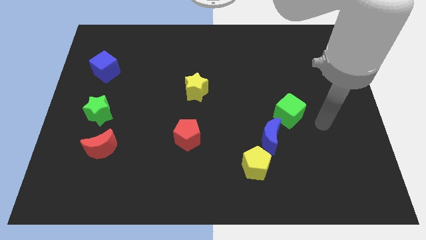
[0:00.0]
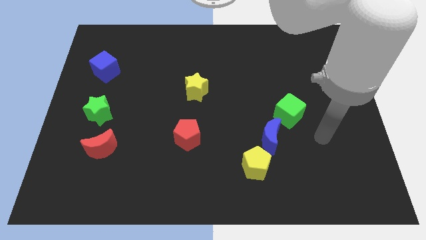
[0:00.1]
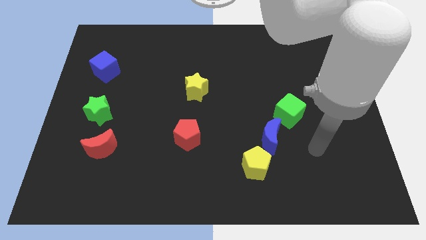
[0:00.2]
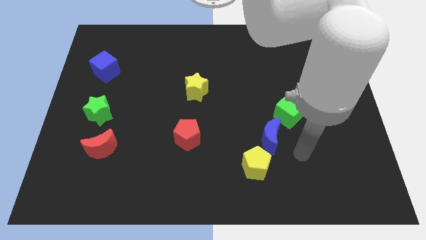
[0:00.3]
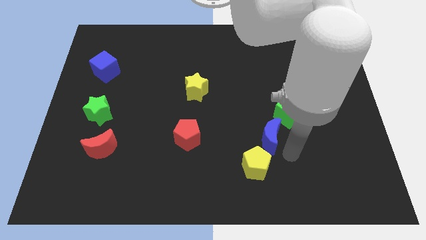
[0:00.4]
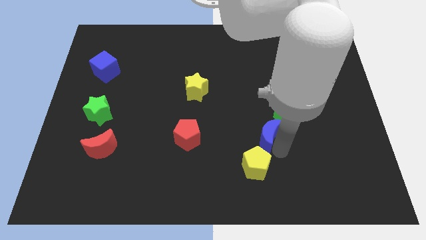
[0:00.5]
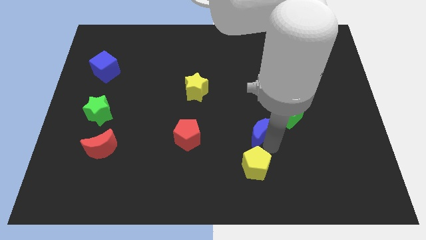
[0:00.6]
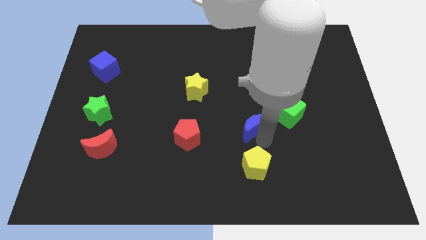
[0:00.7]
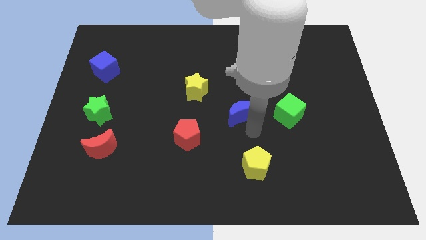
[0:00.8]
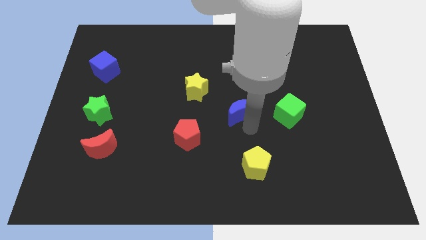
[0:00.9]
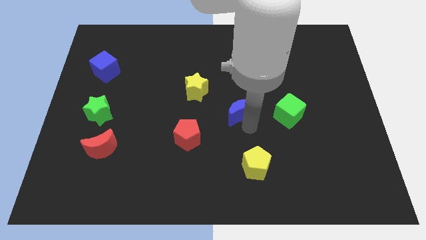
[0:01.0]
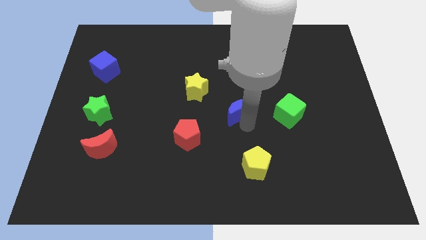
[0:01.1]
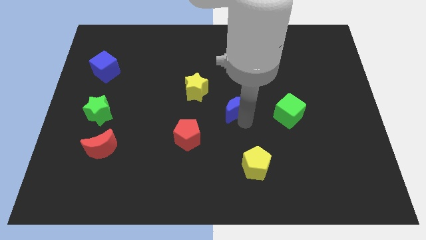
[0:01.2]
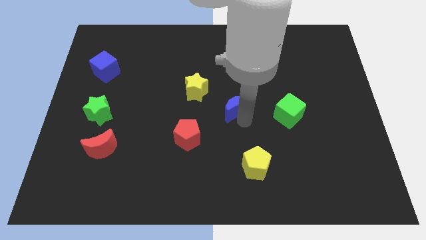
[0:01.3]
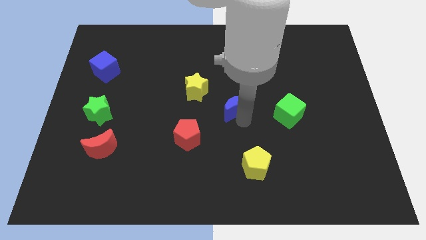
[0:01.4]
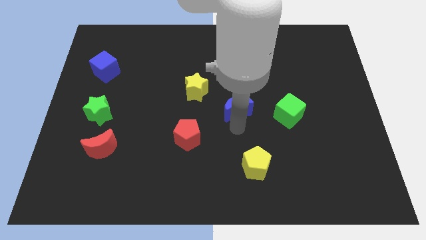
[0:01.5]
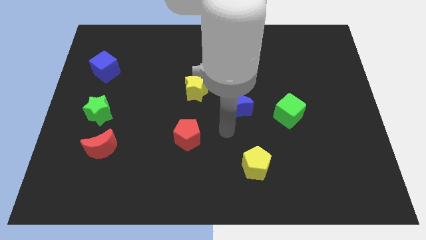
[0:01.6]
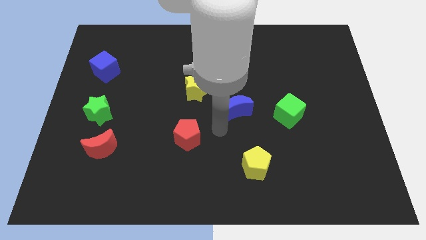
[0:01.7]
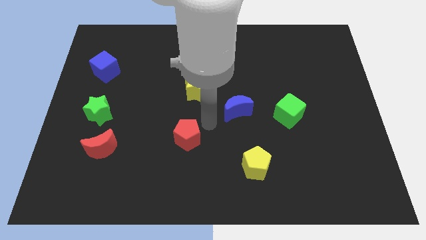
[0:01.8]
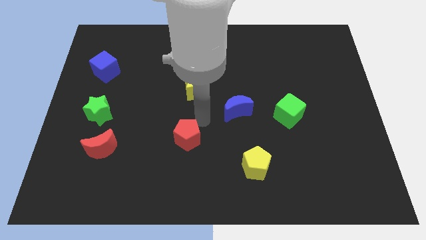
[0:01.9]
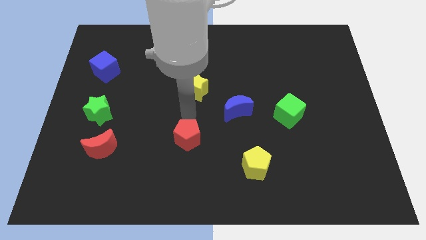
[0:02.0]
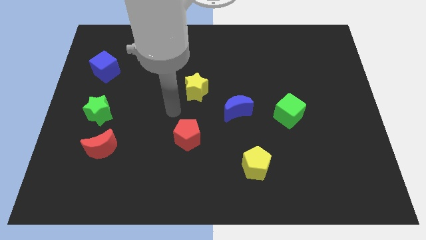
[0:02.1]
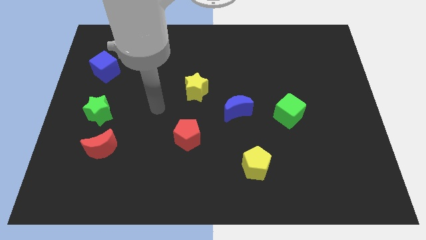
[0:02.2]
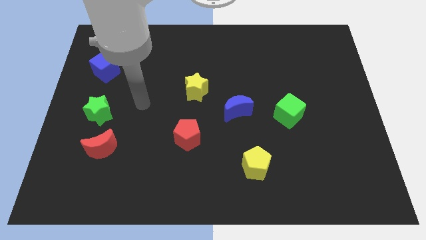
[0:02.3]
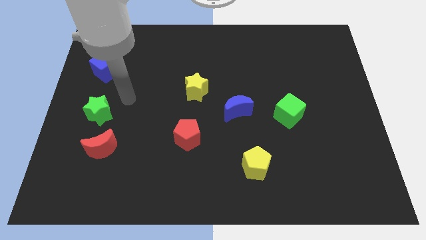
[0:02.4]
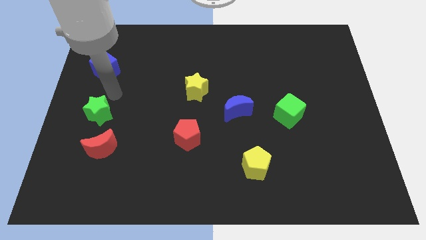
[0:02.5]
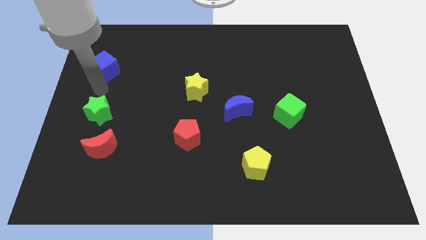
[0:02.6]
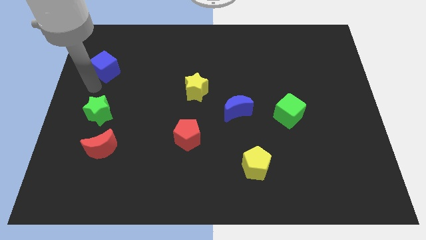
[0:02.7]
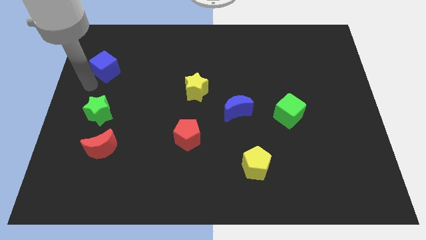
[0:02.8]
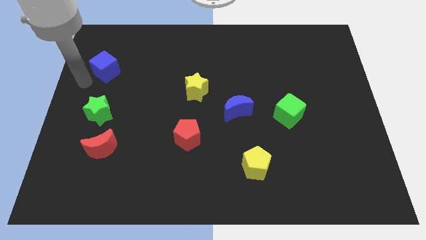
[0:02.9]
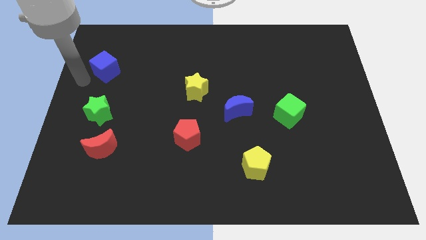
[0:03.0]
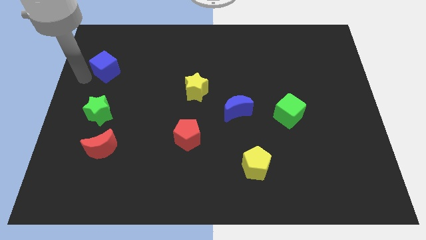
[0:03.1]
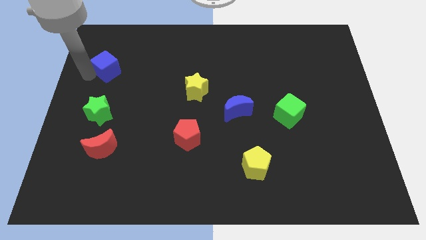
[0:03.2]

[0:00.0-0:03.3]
place the arm to the left of the blue cube

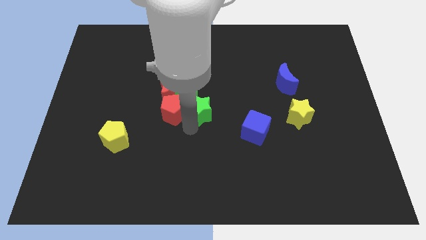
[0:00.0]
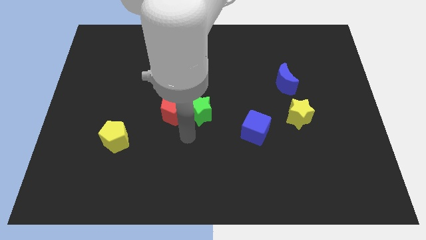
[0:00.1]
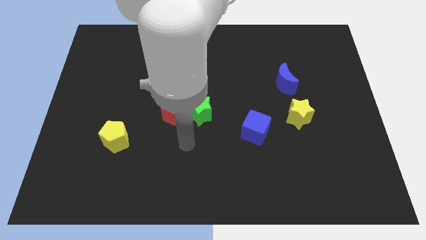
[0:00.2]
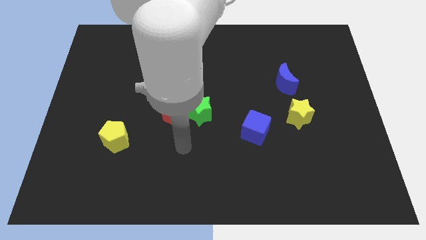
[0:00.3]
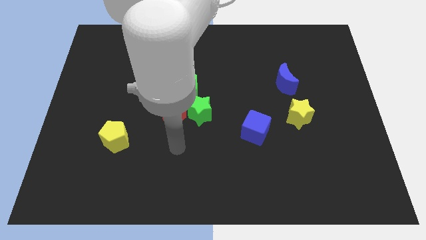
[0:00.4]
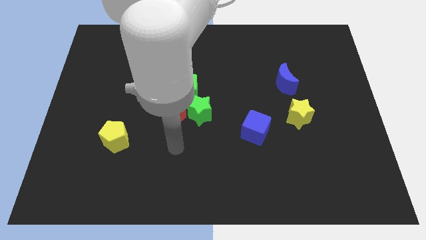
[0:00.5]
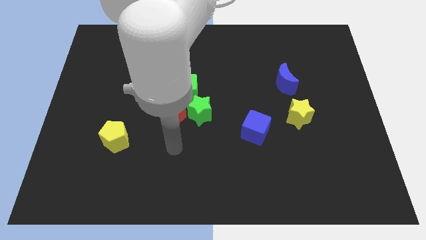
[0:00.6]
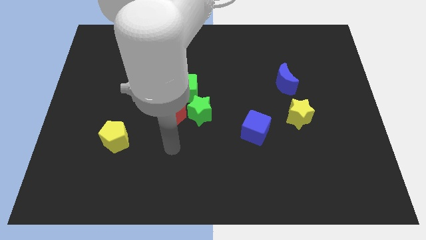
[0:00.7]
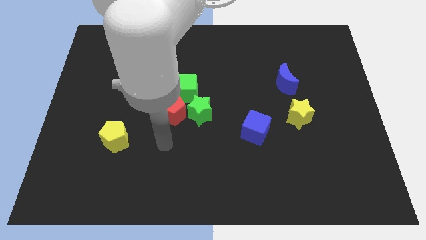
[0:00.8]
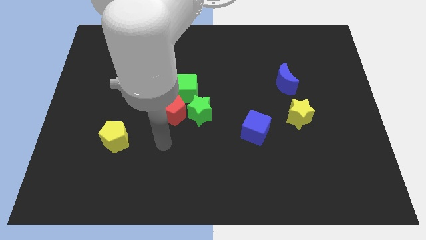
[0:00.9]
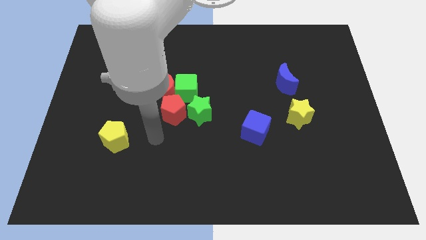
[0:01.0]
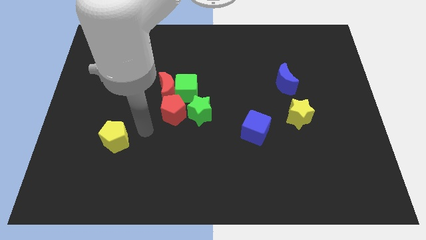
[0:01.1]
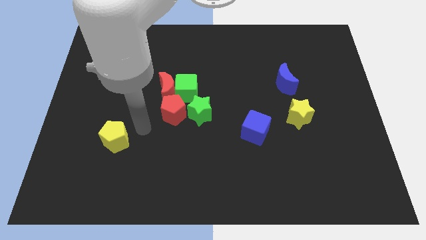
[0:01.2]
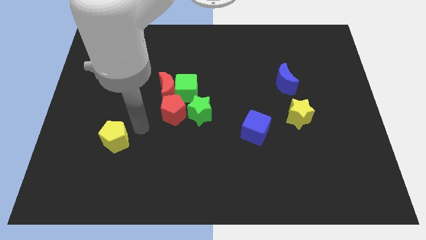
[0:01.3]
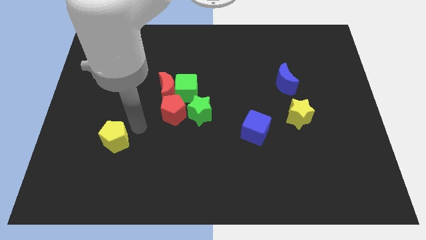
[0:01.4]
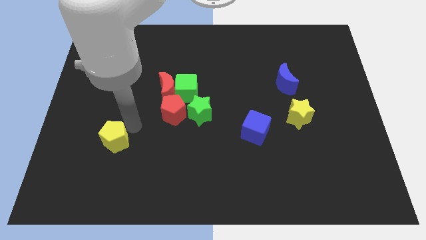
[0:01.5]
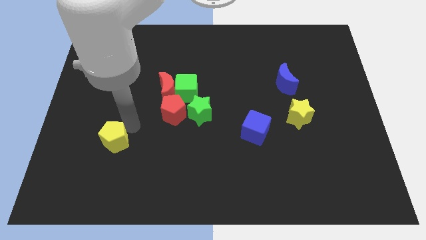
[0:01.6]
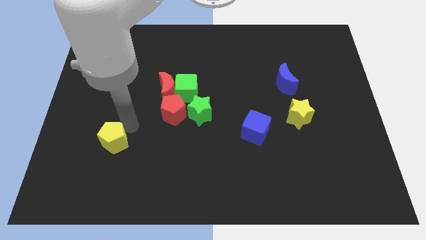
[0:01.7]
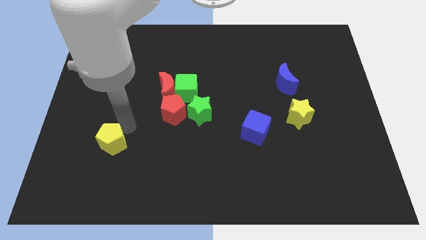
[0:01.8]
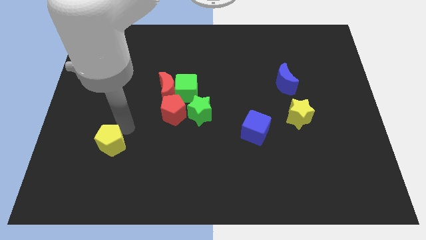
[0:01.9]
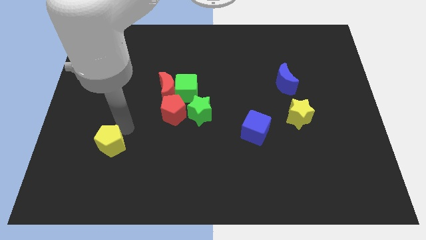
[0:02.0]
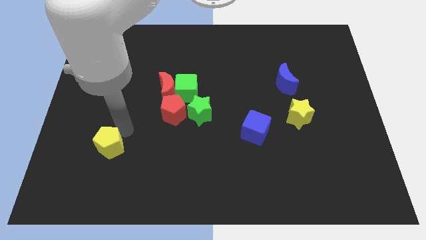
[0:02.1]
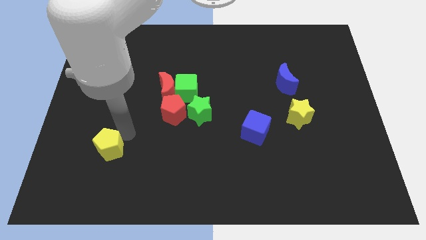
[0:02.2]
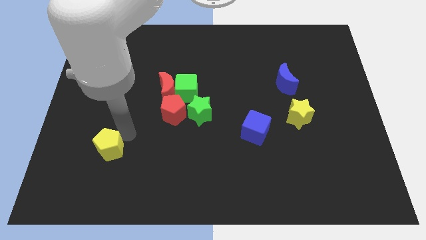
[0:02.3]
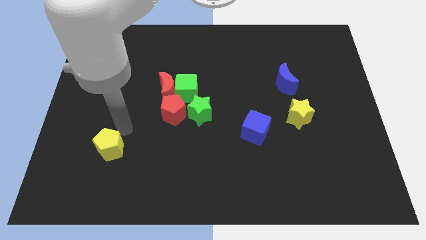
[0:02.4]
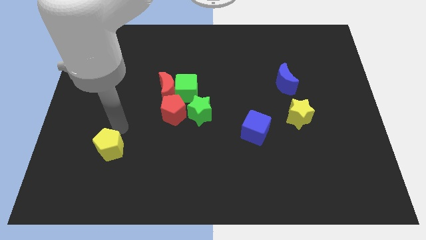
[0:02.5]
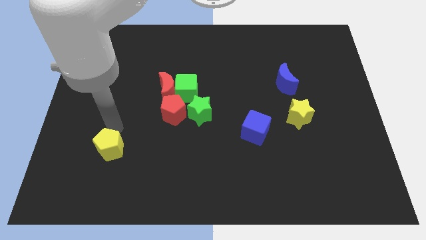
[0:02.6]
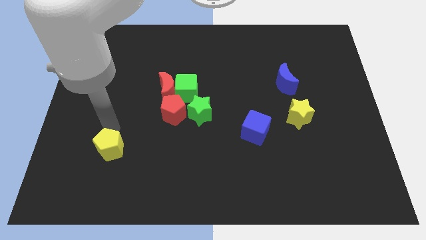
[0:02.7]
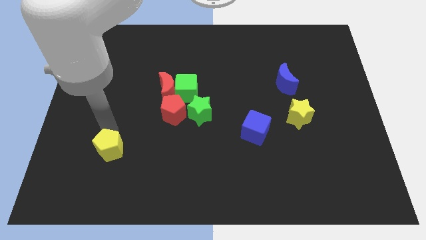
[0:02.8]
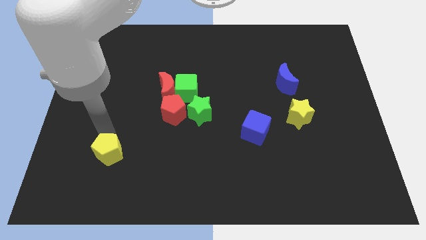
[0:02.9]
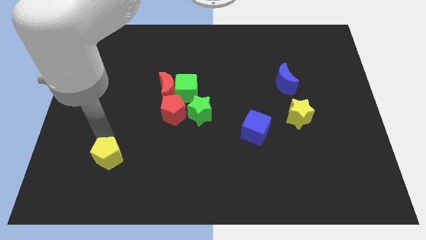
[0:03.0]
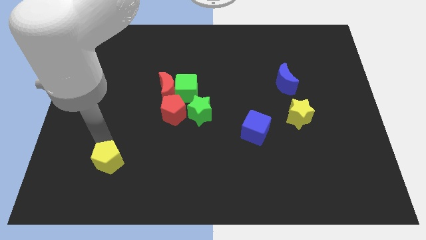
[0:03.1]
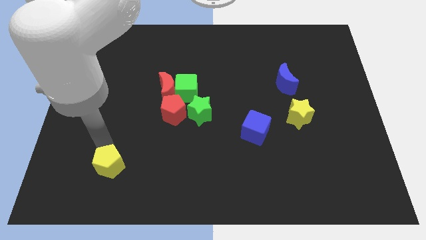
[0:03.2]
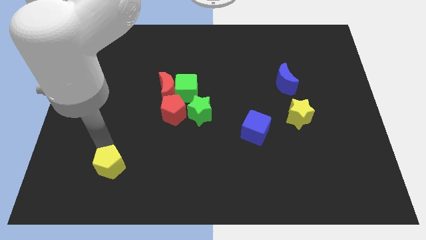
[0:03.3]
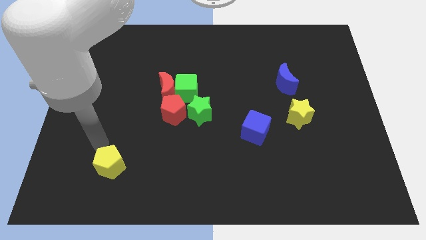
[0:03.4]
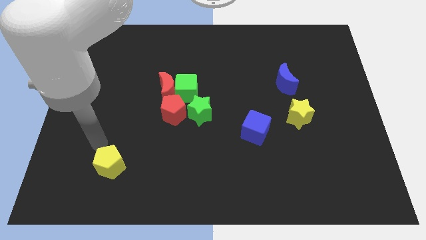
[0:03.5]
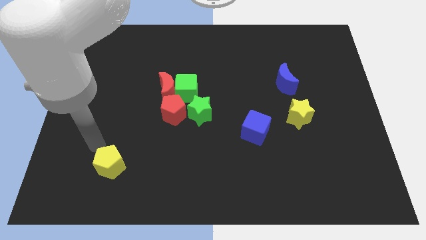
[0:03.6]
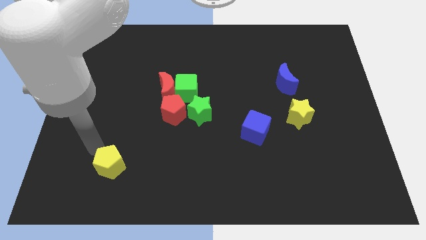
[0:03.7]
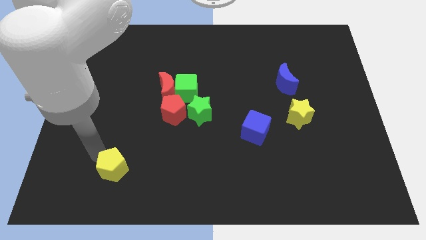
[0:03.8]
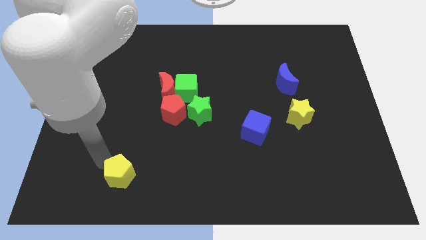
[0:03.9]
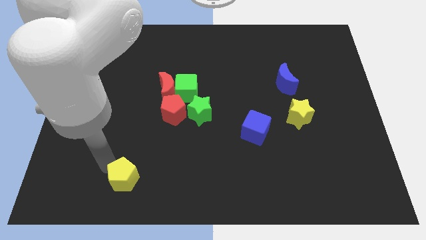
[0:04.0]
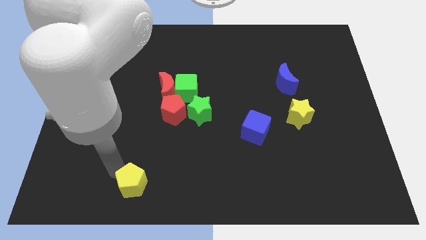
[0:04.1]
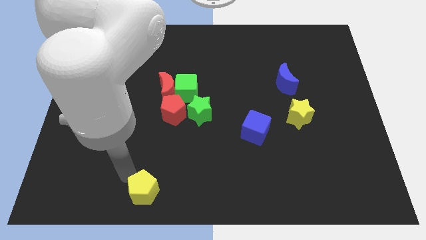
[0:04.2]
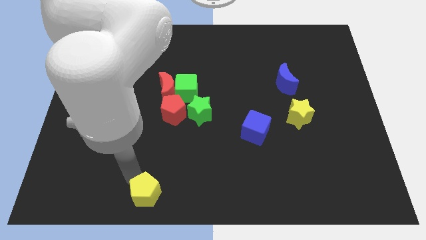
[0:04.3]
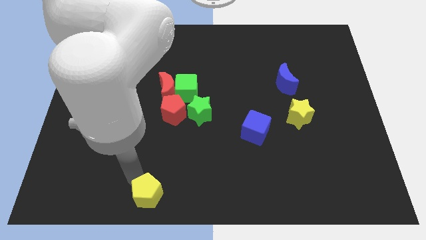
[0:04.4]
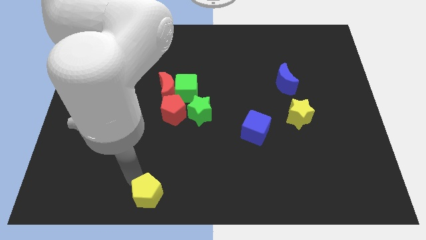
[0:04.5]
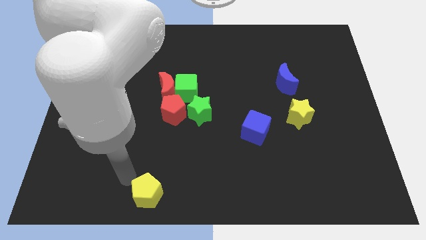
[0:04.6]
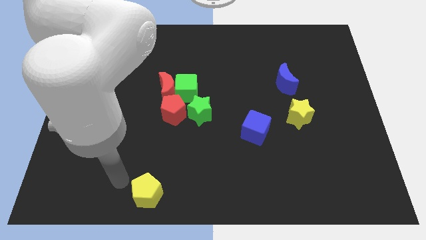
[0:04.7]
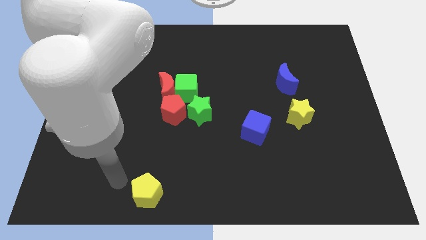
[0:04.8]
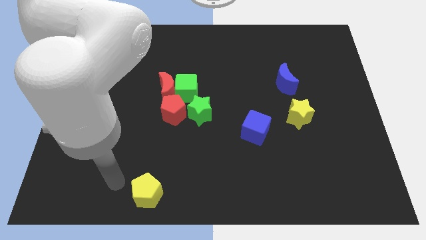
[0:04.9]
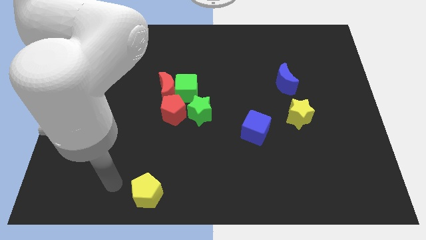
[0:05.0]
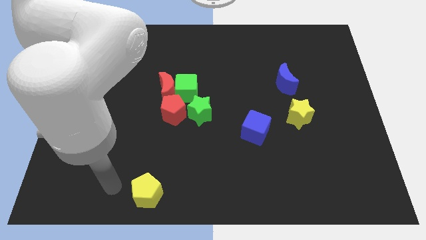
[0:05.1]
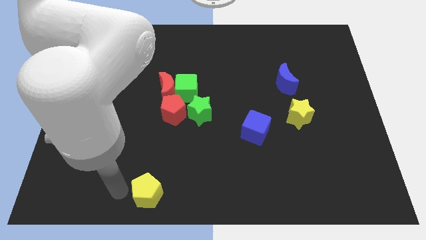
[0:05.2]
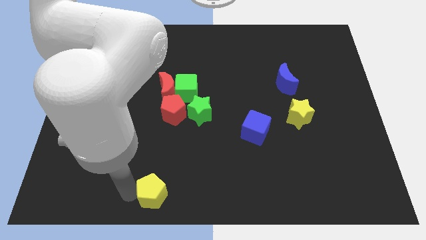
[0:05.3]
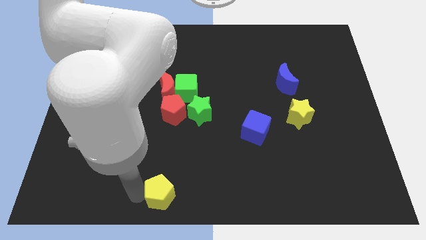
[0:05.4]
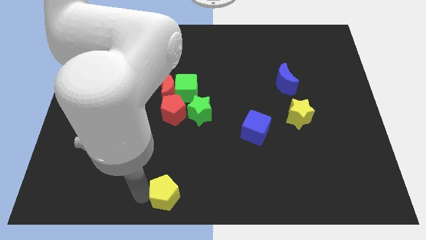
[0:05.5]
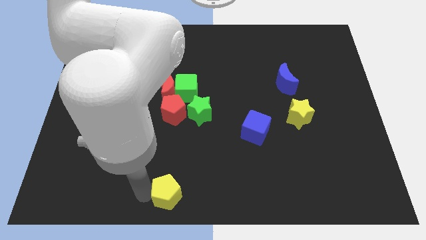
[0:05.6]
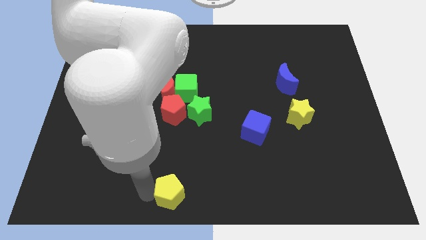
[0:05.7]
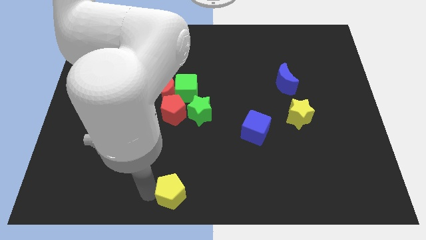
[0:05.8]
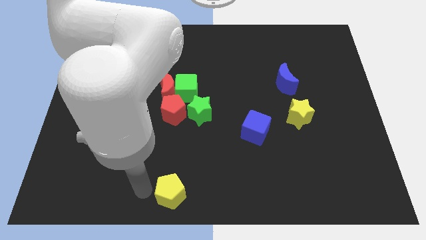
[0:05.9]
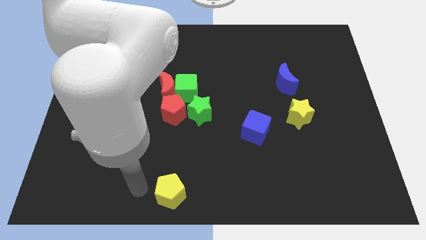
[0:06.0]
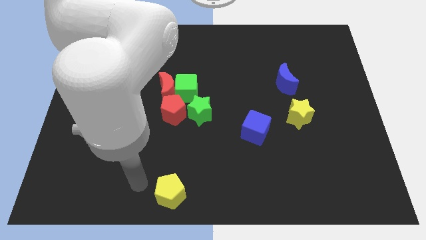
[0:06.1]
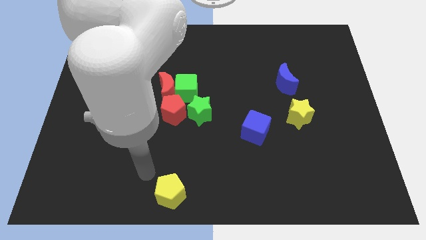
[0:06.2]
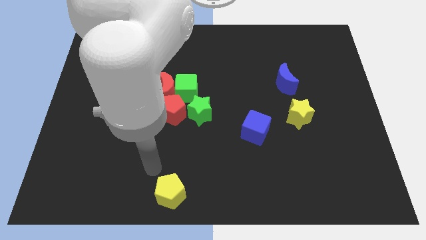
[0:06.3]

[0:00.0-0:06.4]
place the yellow pentagon towards bottom
